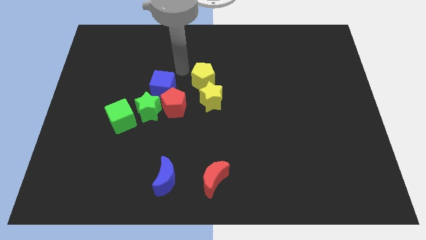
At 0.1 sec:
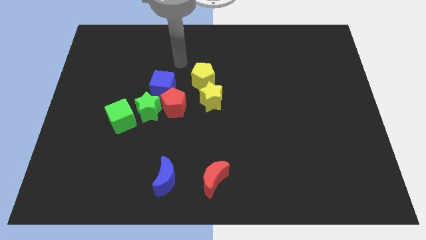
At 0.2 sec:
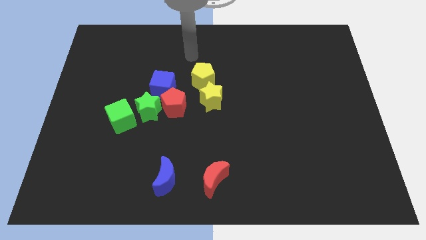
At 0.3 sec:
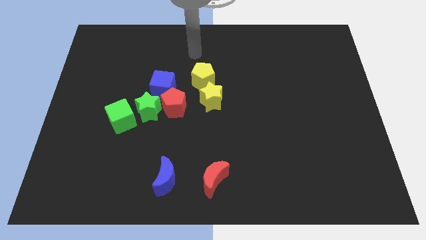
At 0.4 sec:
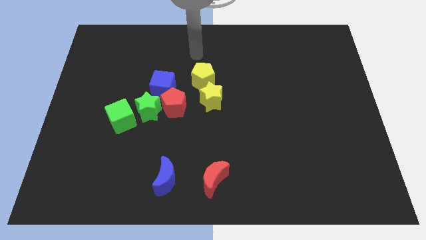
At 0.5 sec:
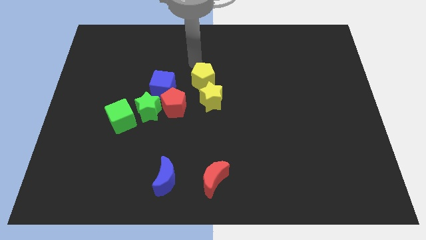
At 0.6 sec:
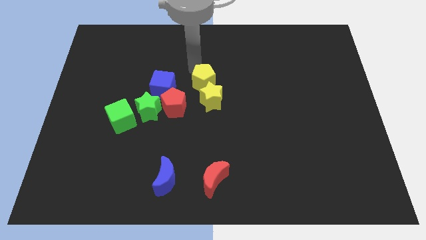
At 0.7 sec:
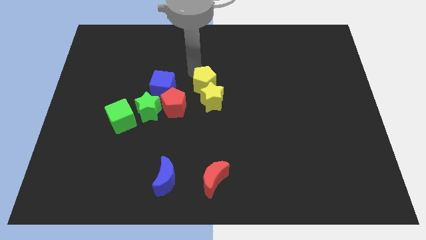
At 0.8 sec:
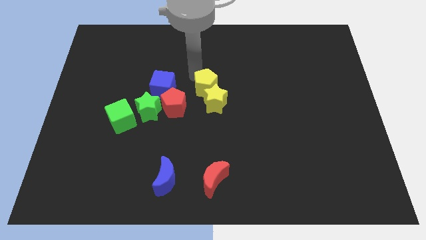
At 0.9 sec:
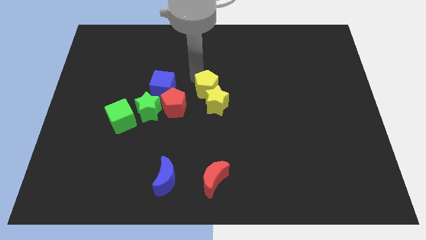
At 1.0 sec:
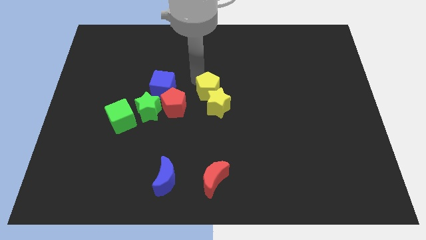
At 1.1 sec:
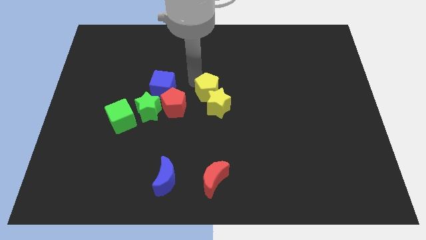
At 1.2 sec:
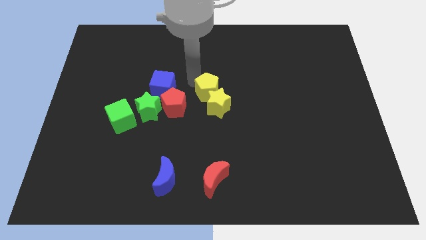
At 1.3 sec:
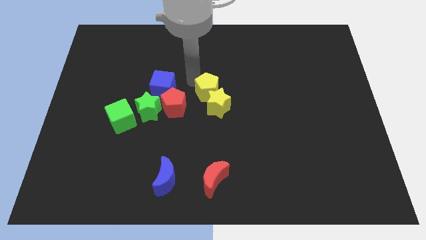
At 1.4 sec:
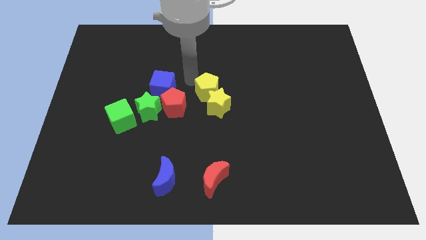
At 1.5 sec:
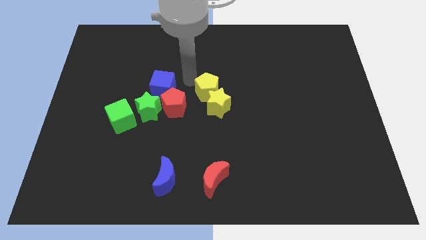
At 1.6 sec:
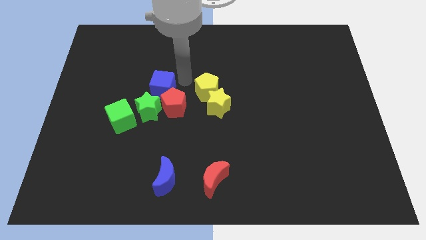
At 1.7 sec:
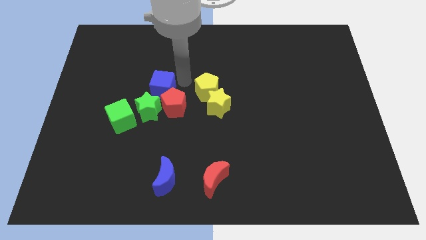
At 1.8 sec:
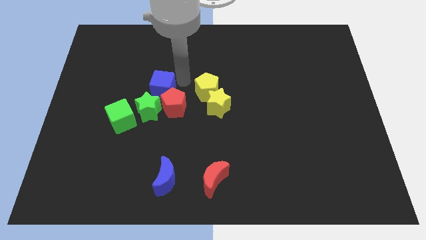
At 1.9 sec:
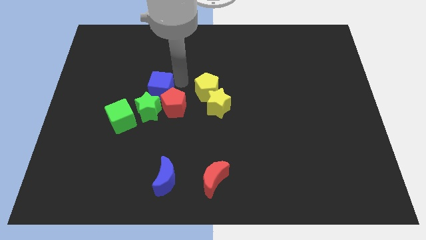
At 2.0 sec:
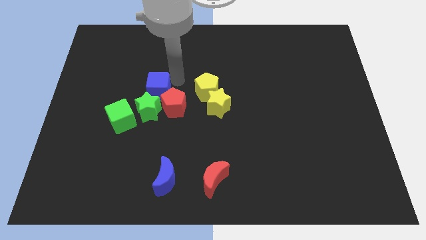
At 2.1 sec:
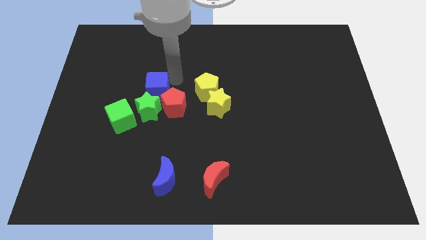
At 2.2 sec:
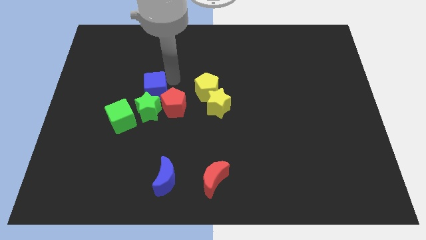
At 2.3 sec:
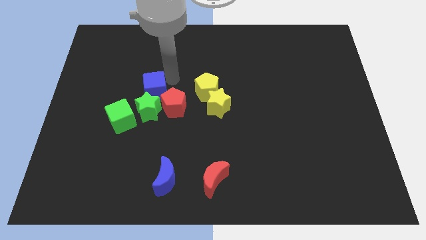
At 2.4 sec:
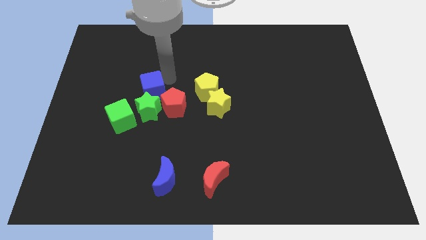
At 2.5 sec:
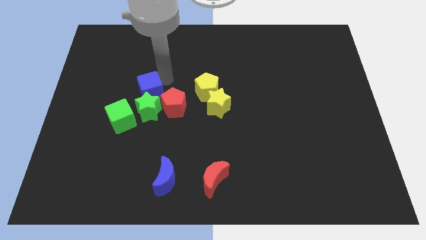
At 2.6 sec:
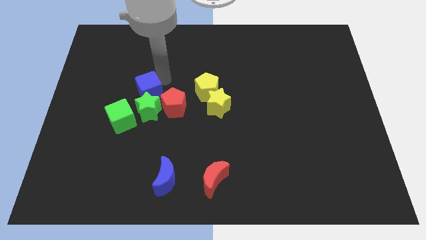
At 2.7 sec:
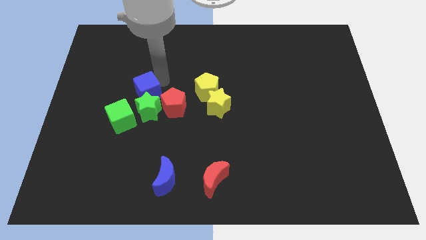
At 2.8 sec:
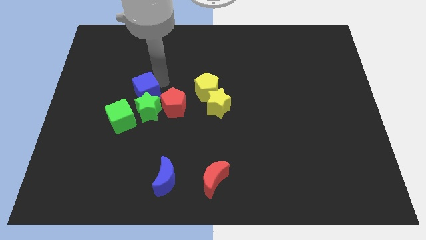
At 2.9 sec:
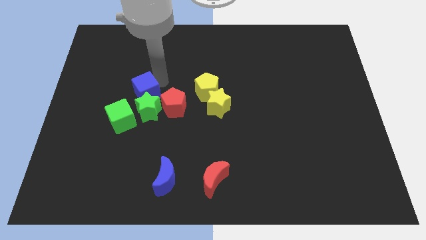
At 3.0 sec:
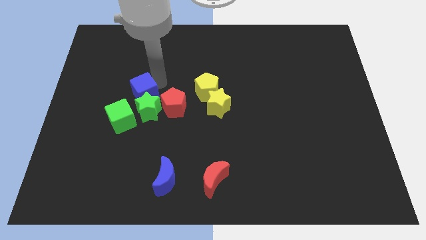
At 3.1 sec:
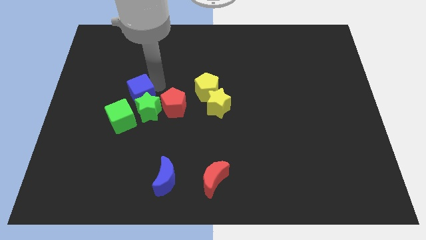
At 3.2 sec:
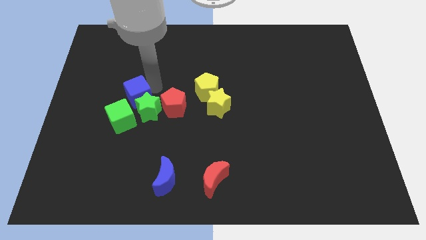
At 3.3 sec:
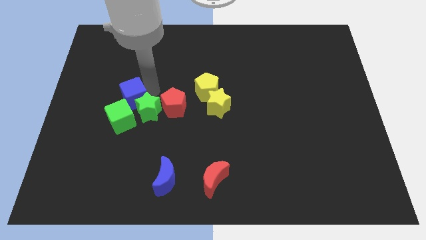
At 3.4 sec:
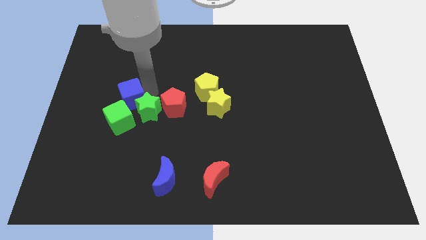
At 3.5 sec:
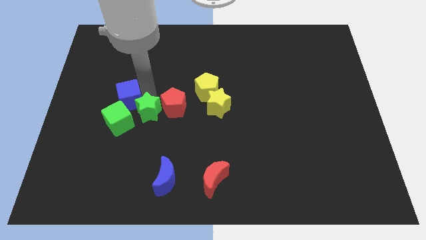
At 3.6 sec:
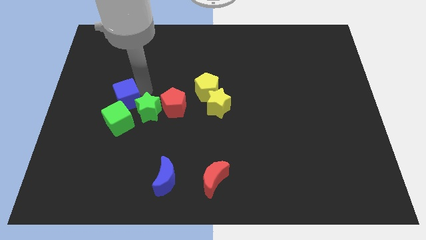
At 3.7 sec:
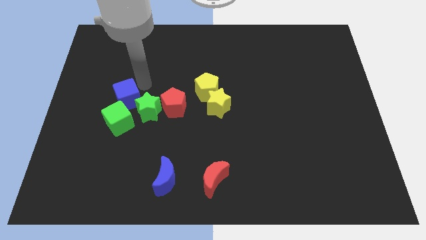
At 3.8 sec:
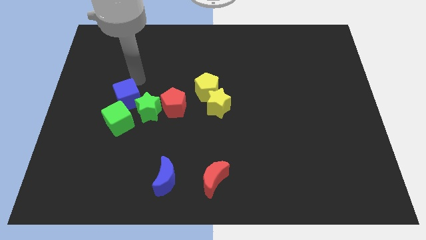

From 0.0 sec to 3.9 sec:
push the yellow pentagon into the yellow star

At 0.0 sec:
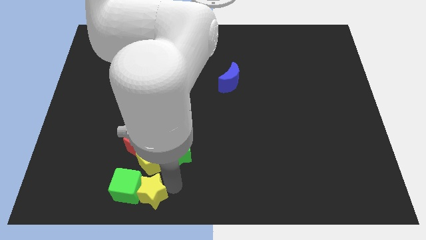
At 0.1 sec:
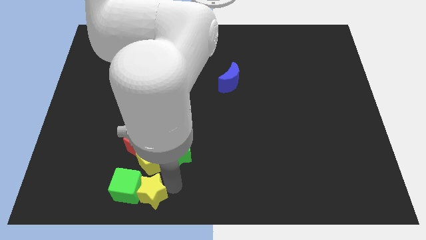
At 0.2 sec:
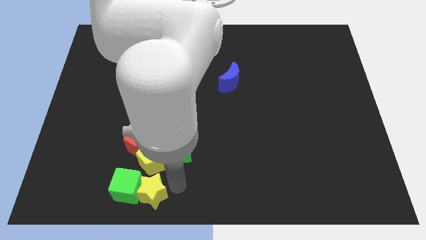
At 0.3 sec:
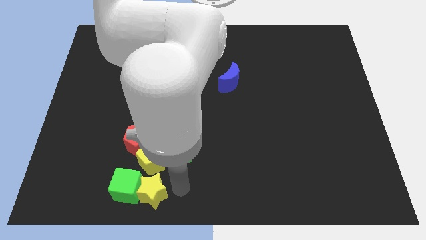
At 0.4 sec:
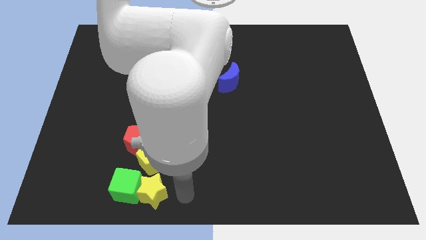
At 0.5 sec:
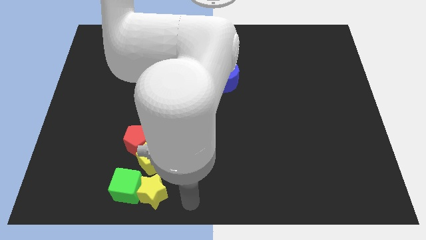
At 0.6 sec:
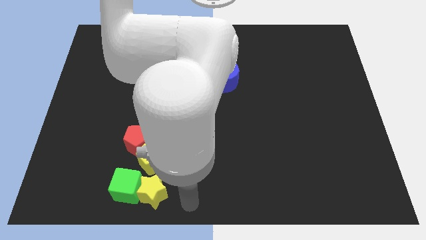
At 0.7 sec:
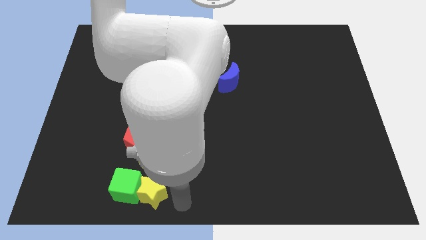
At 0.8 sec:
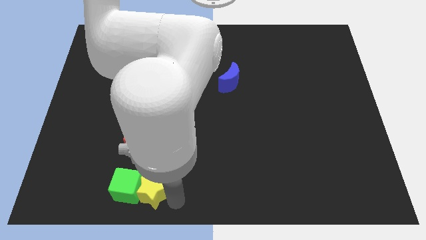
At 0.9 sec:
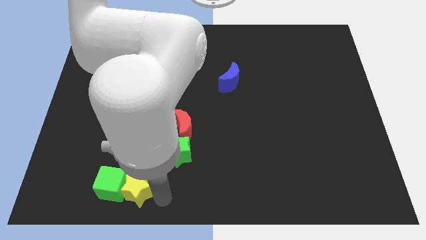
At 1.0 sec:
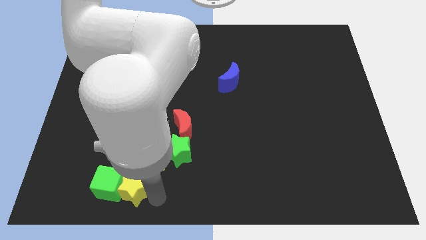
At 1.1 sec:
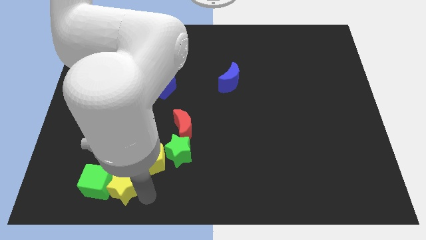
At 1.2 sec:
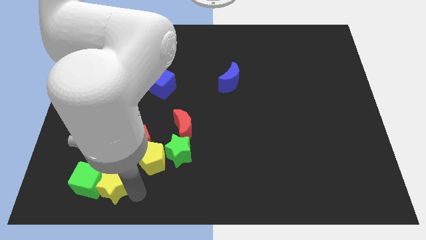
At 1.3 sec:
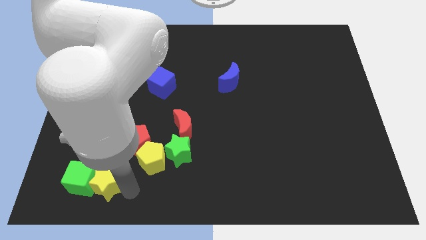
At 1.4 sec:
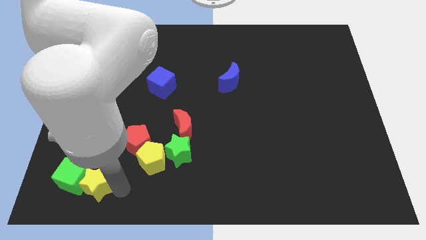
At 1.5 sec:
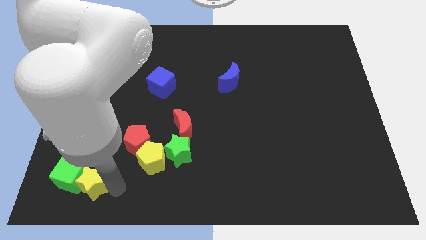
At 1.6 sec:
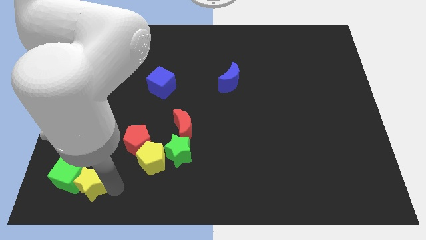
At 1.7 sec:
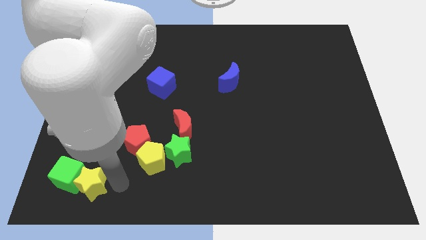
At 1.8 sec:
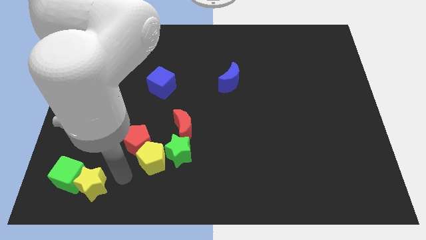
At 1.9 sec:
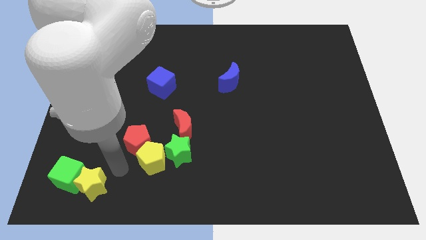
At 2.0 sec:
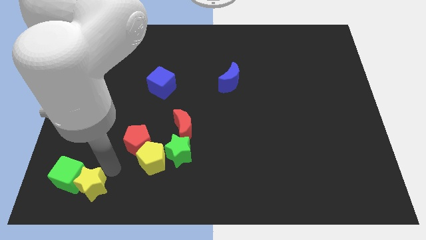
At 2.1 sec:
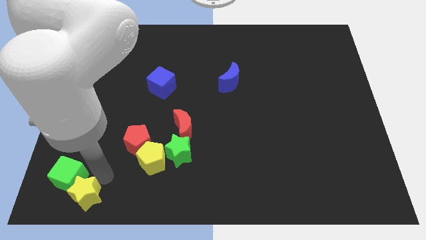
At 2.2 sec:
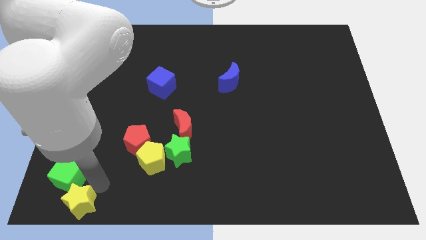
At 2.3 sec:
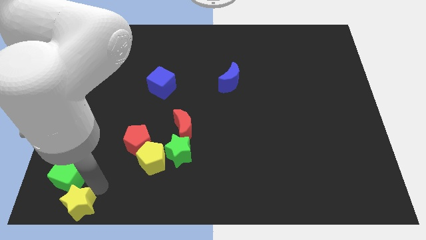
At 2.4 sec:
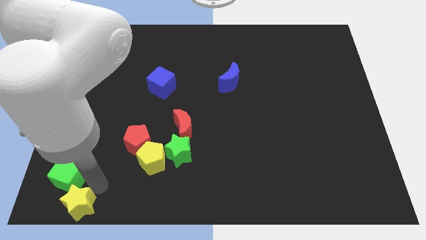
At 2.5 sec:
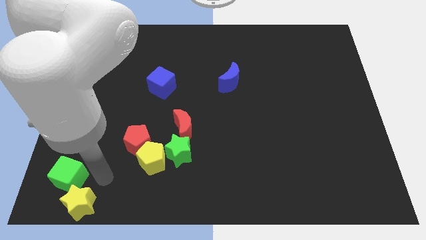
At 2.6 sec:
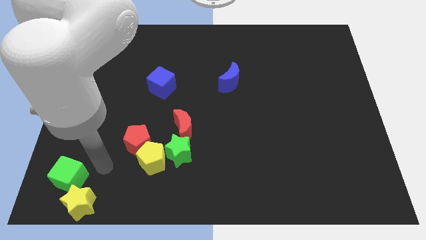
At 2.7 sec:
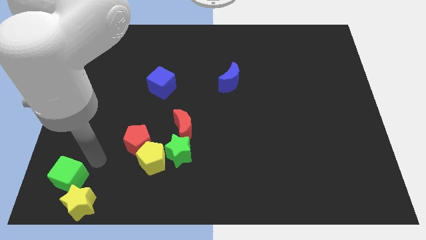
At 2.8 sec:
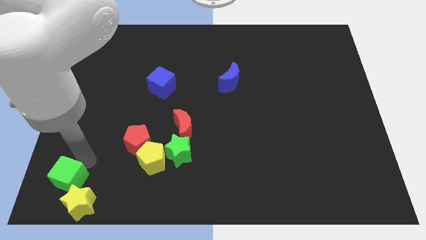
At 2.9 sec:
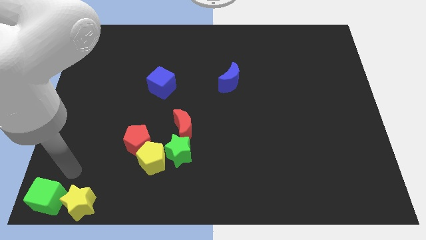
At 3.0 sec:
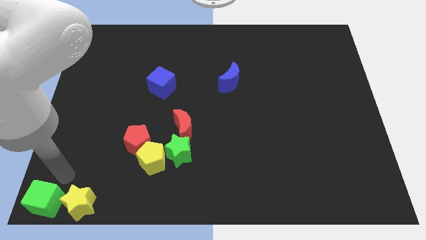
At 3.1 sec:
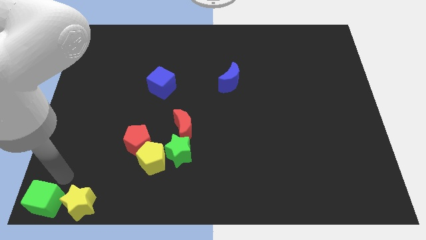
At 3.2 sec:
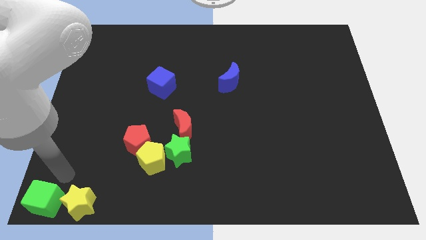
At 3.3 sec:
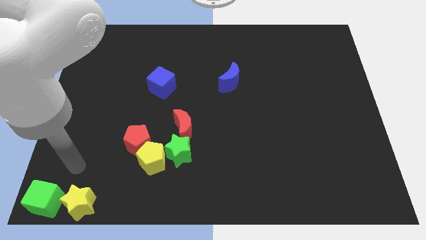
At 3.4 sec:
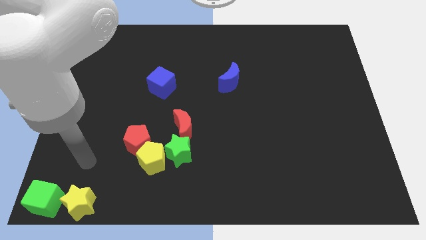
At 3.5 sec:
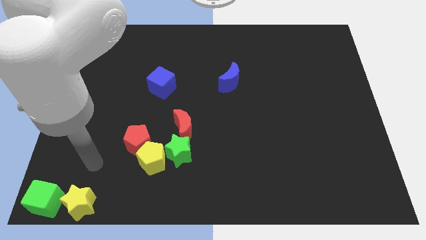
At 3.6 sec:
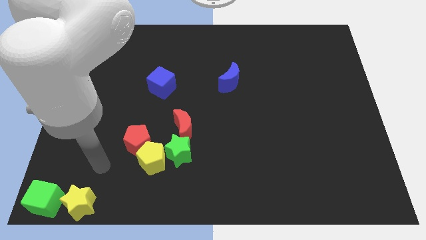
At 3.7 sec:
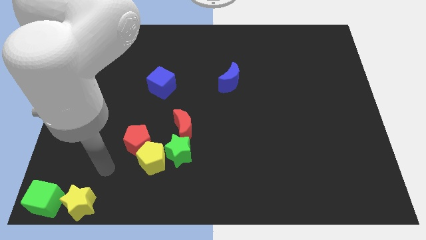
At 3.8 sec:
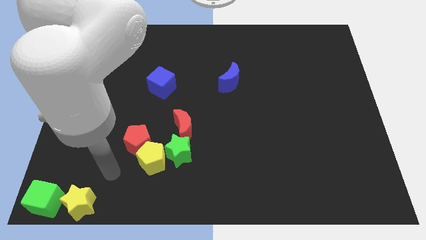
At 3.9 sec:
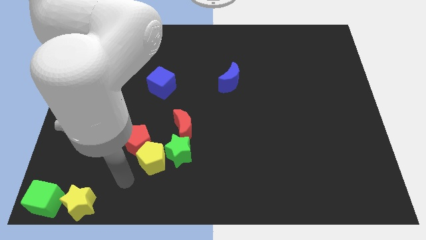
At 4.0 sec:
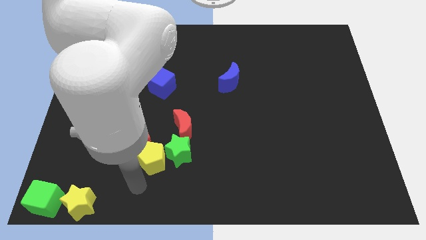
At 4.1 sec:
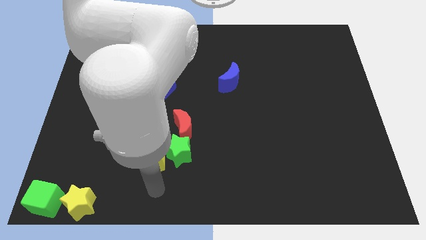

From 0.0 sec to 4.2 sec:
slide yellow star along with green cube to bottom left corner

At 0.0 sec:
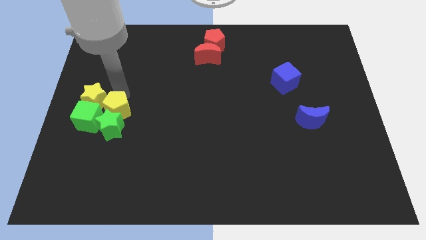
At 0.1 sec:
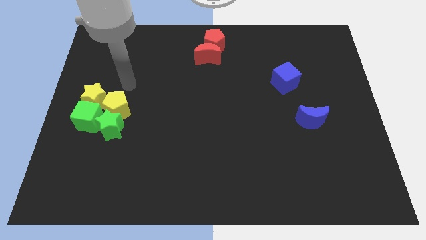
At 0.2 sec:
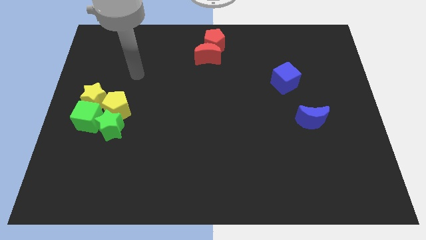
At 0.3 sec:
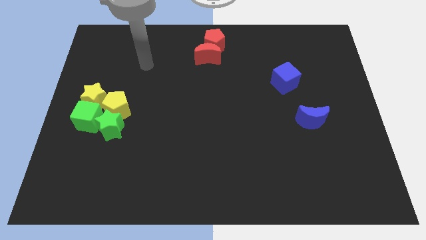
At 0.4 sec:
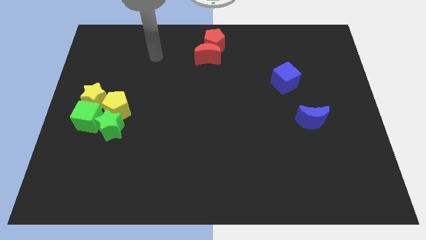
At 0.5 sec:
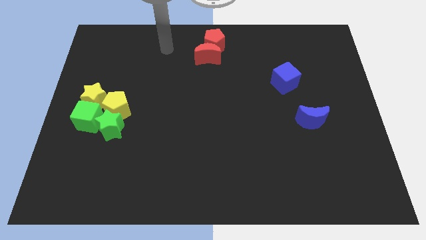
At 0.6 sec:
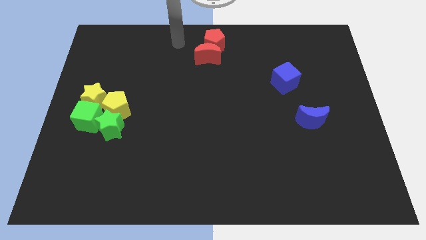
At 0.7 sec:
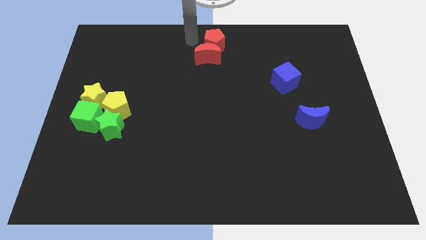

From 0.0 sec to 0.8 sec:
move your arm left to the red pentagon

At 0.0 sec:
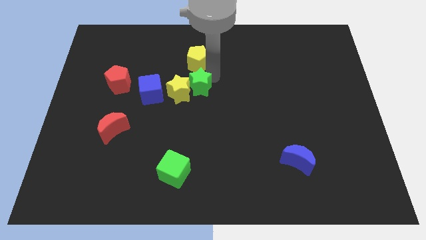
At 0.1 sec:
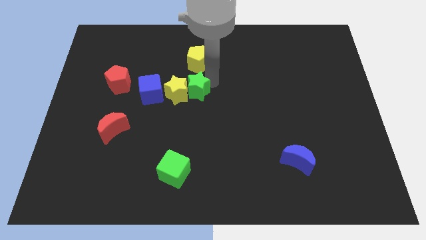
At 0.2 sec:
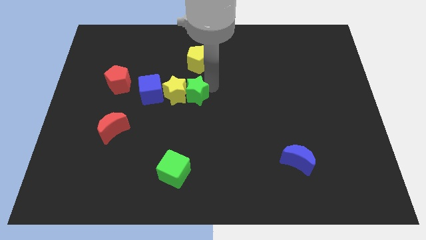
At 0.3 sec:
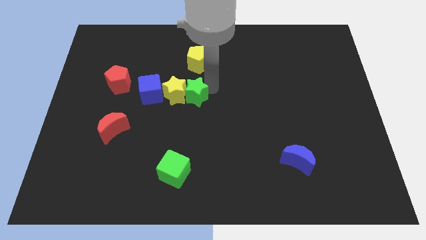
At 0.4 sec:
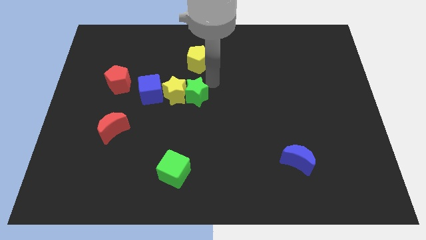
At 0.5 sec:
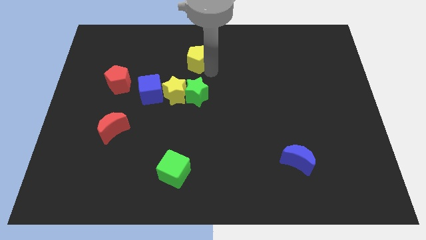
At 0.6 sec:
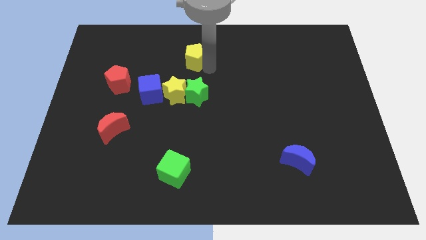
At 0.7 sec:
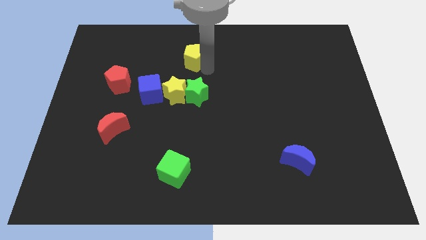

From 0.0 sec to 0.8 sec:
separate yellow pentagon from green star
